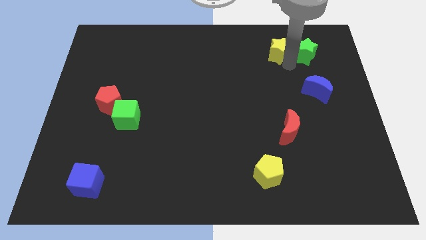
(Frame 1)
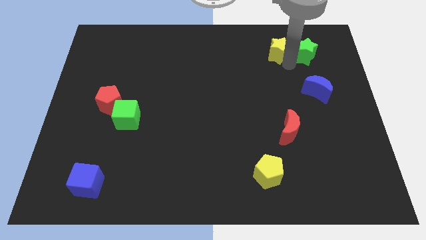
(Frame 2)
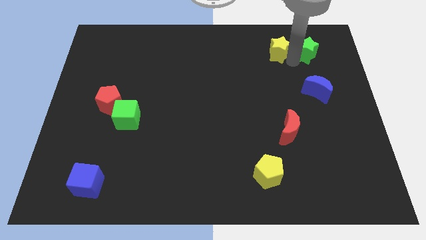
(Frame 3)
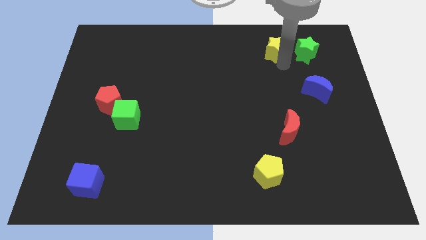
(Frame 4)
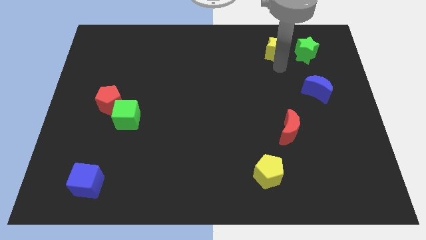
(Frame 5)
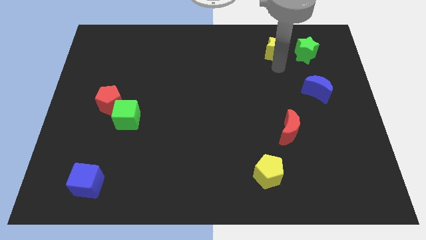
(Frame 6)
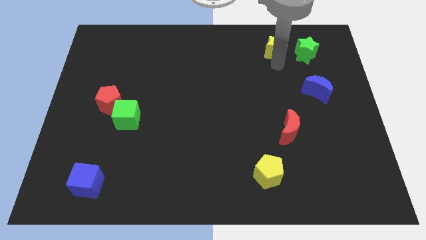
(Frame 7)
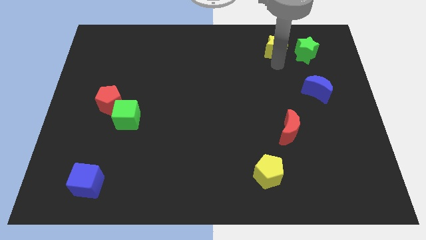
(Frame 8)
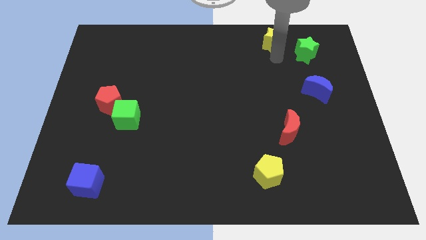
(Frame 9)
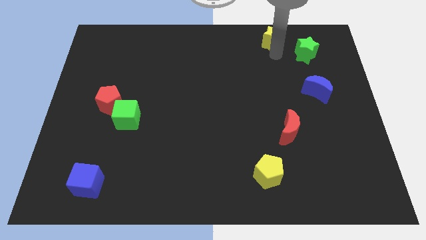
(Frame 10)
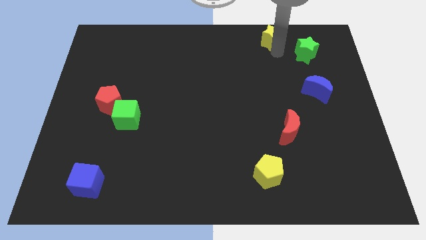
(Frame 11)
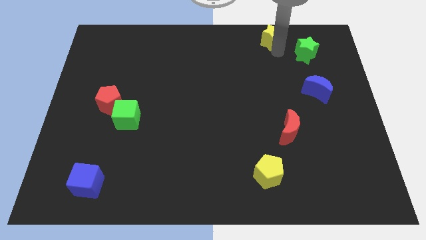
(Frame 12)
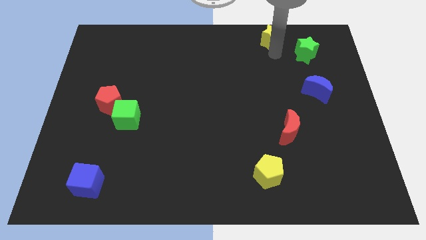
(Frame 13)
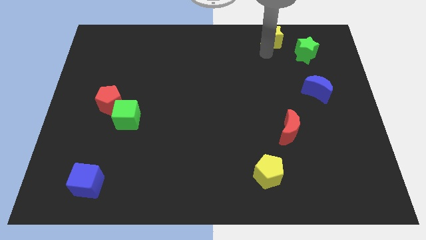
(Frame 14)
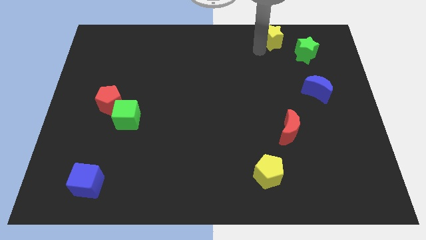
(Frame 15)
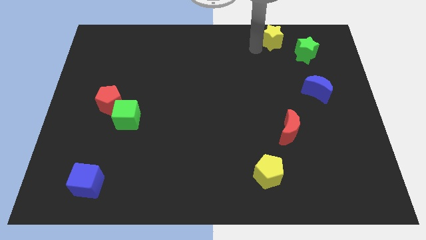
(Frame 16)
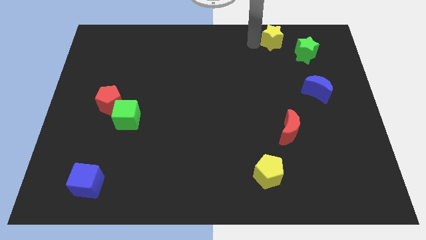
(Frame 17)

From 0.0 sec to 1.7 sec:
separate the yellow star and the green star

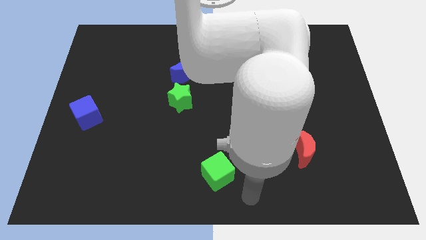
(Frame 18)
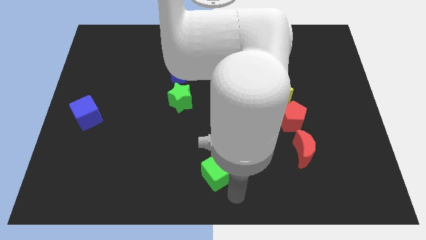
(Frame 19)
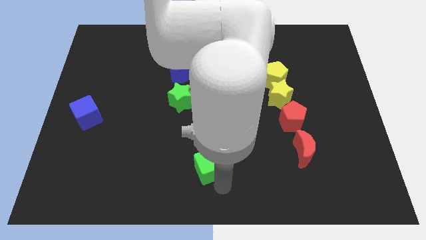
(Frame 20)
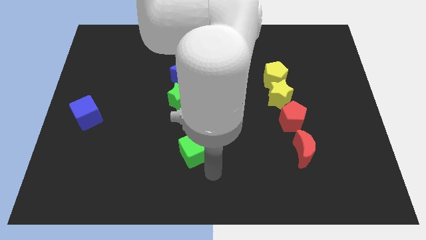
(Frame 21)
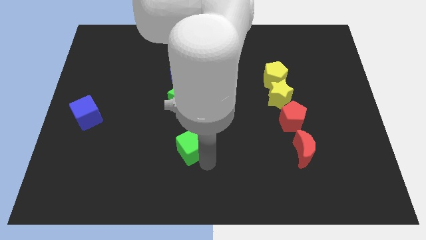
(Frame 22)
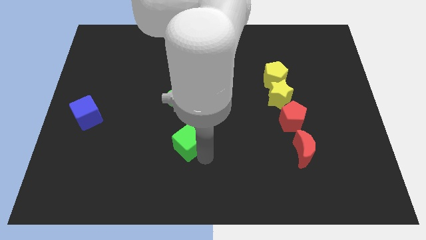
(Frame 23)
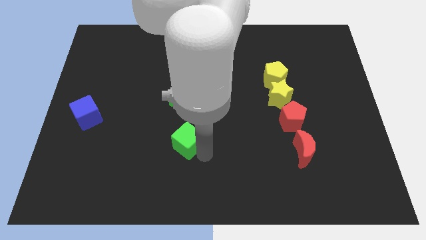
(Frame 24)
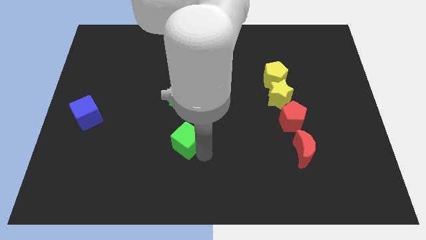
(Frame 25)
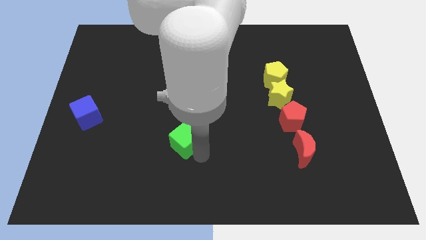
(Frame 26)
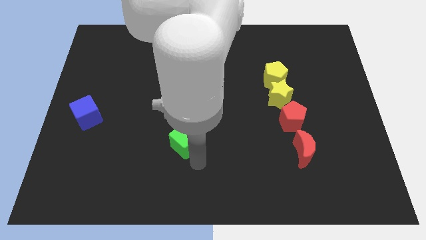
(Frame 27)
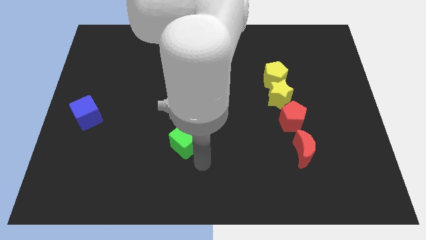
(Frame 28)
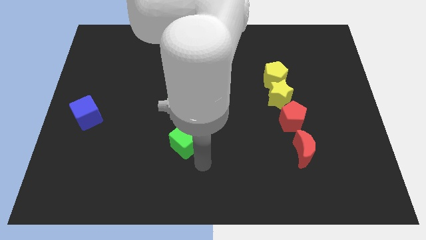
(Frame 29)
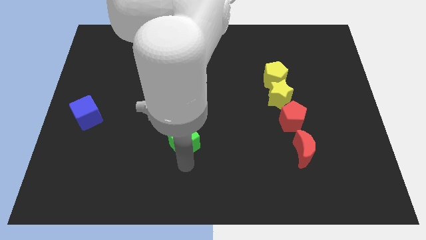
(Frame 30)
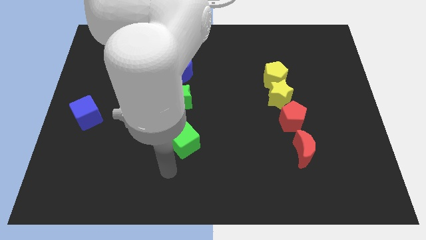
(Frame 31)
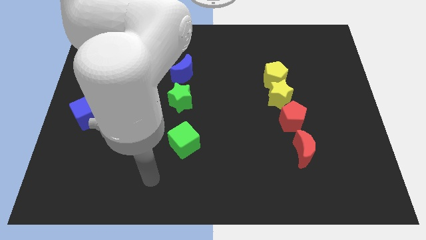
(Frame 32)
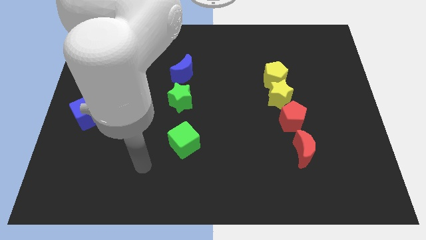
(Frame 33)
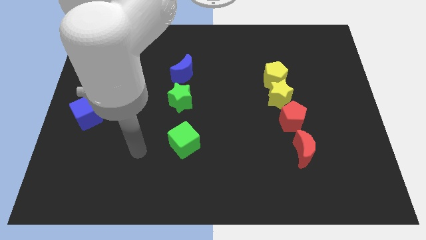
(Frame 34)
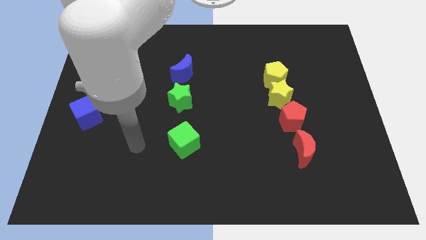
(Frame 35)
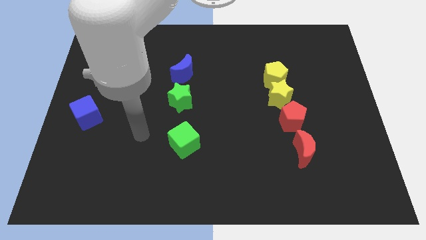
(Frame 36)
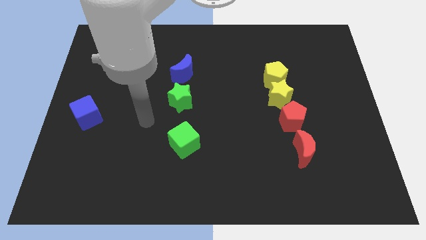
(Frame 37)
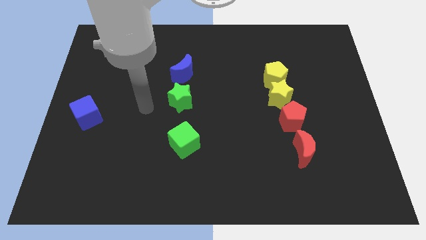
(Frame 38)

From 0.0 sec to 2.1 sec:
slide the green cube vertically below the green star

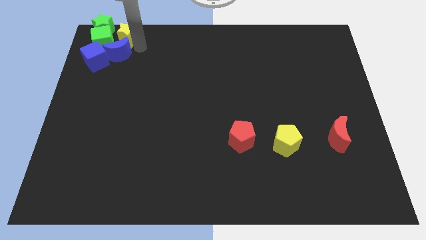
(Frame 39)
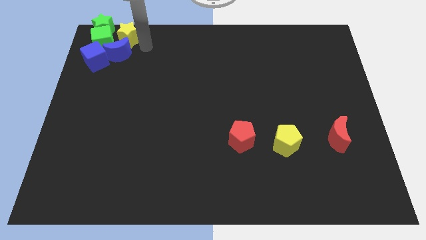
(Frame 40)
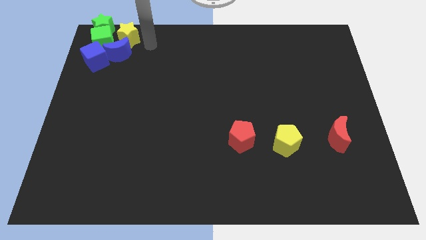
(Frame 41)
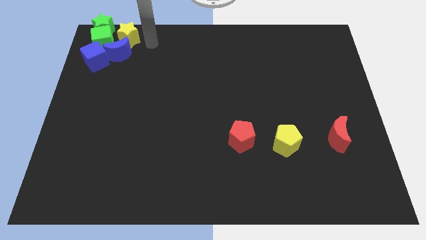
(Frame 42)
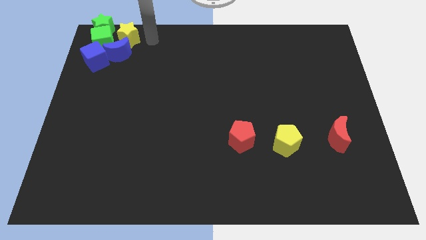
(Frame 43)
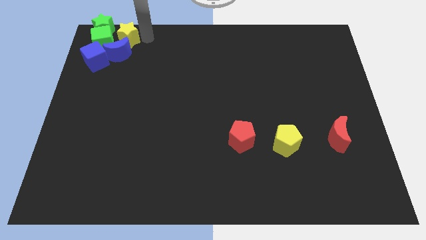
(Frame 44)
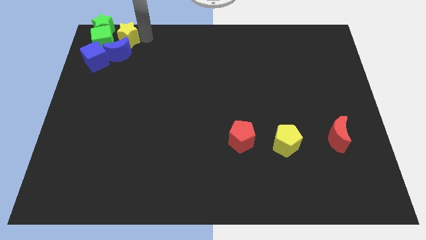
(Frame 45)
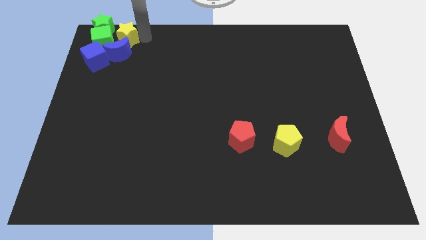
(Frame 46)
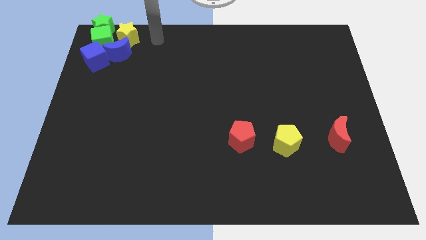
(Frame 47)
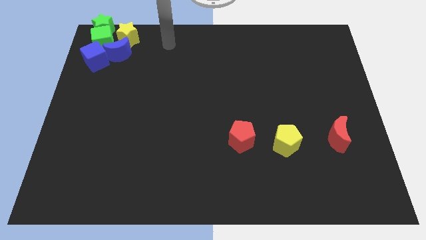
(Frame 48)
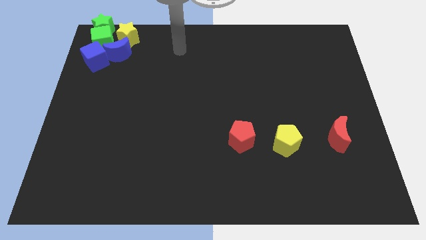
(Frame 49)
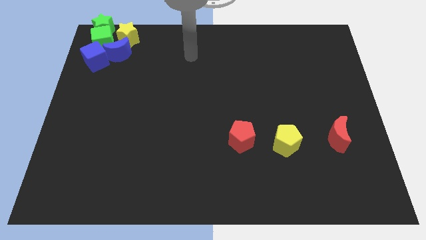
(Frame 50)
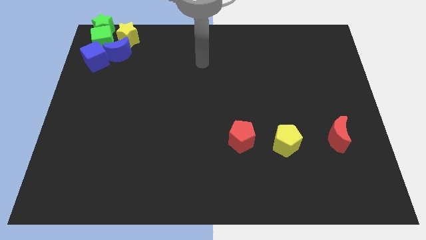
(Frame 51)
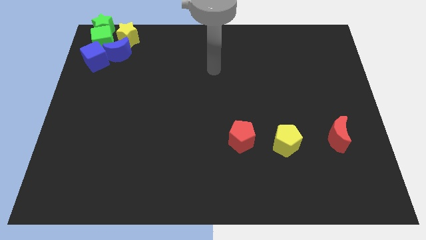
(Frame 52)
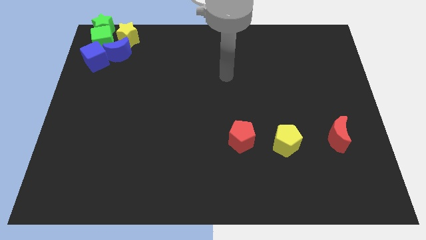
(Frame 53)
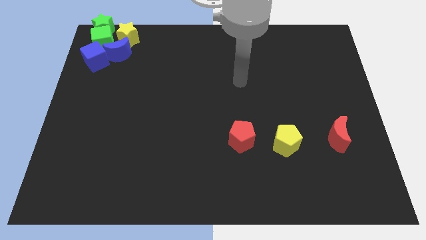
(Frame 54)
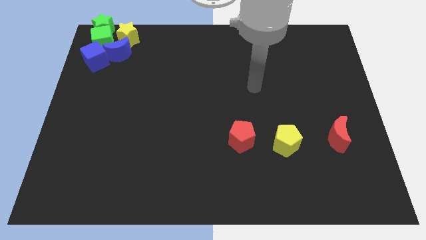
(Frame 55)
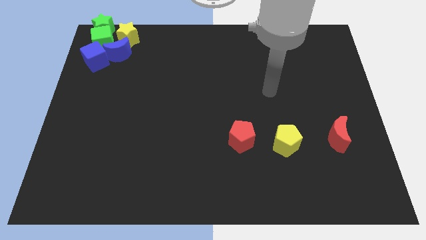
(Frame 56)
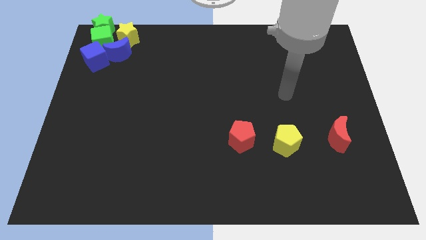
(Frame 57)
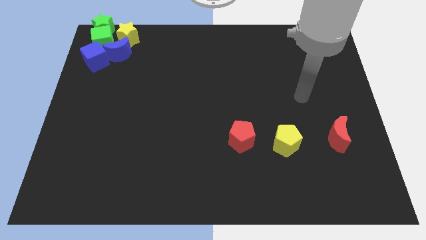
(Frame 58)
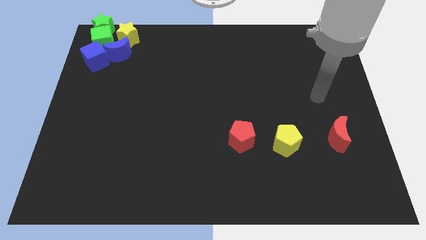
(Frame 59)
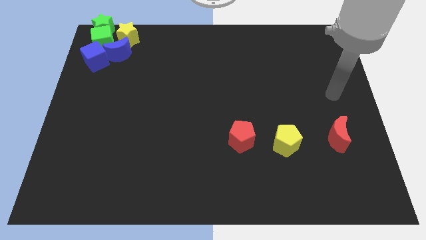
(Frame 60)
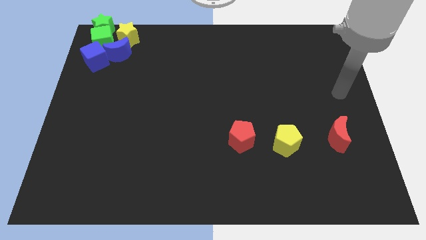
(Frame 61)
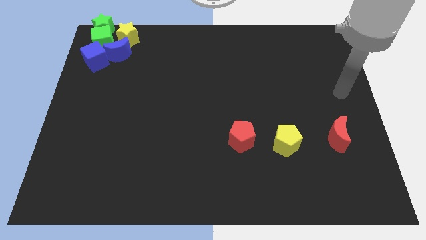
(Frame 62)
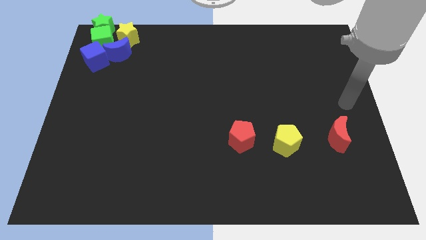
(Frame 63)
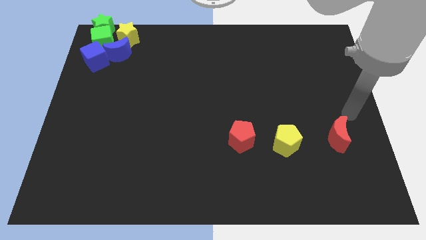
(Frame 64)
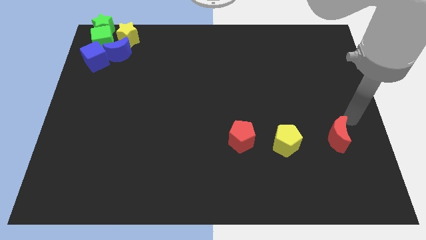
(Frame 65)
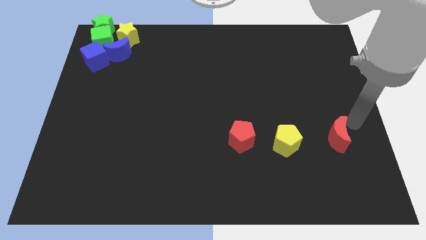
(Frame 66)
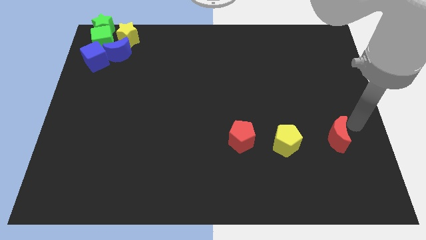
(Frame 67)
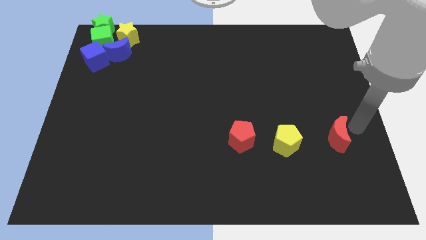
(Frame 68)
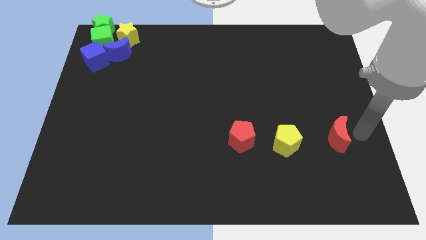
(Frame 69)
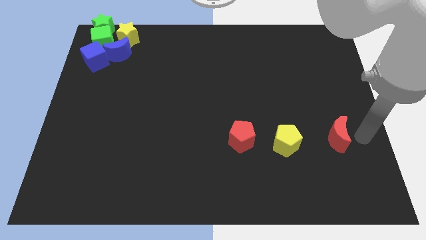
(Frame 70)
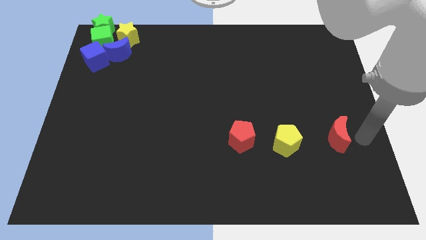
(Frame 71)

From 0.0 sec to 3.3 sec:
move away from the yellow star

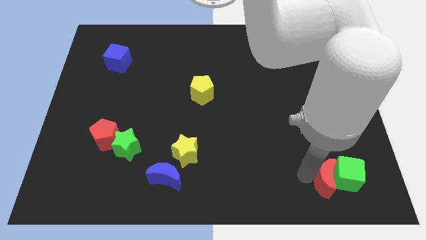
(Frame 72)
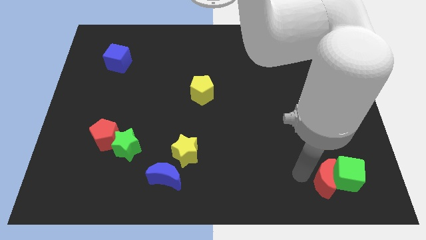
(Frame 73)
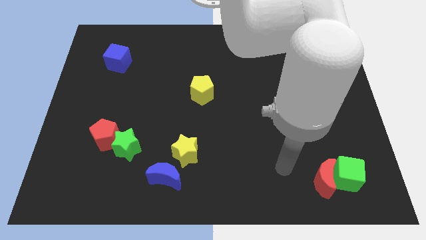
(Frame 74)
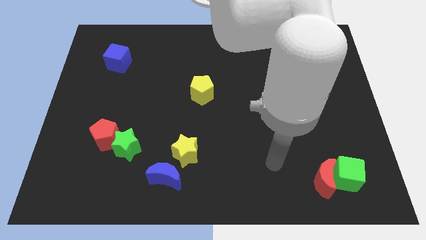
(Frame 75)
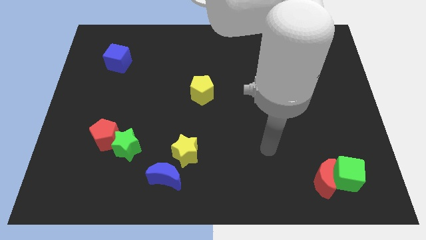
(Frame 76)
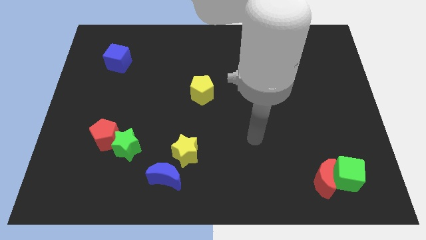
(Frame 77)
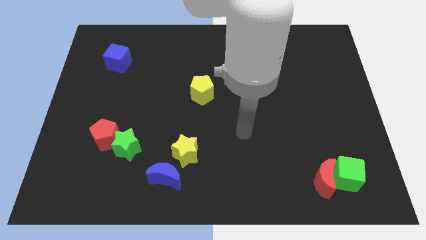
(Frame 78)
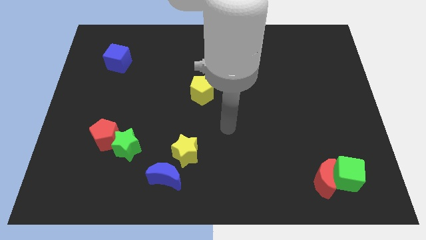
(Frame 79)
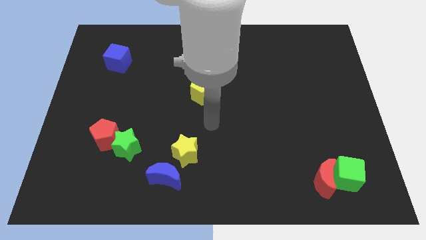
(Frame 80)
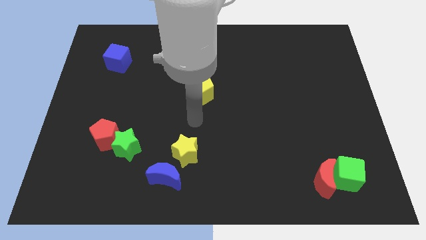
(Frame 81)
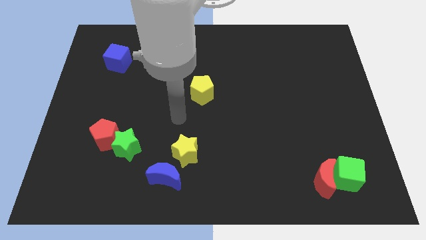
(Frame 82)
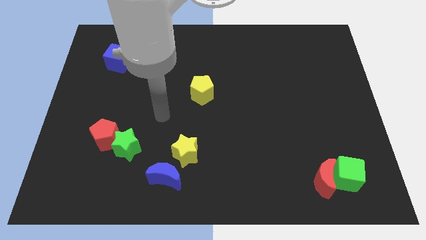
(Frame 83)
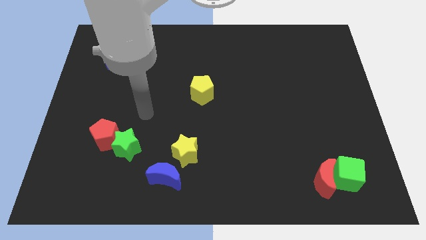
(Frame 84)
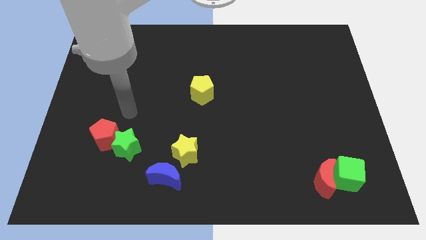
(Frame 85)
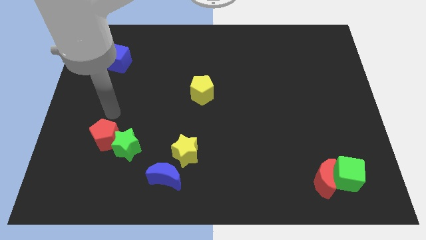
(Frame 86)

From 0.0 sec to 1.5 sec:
move your arm towards the red pentagon

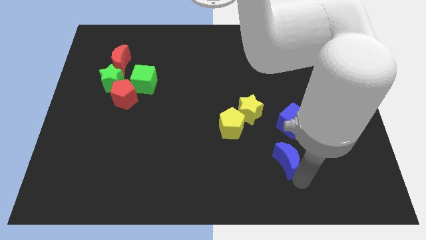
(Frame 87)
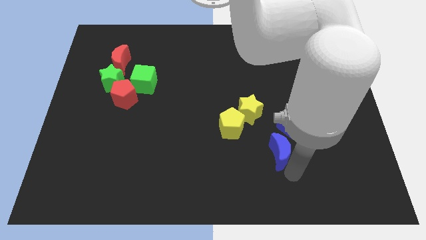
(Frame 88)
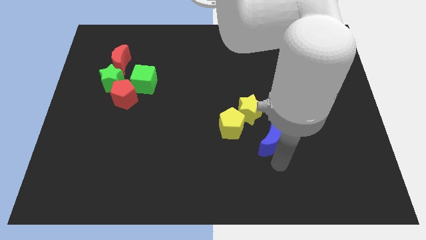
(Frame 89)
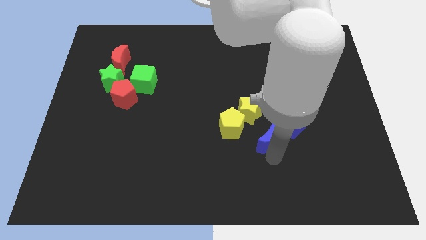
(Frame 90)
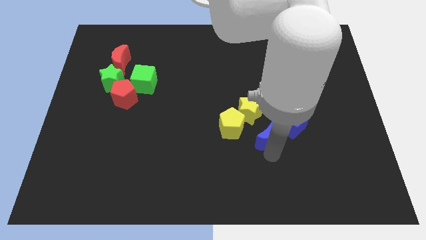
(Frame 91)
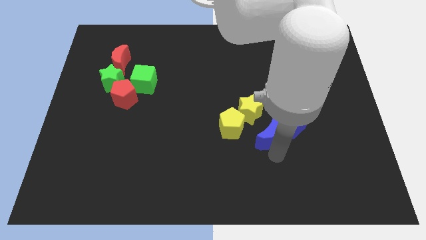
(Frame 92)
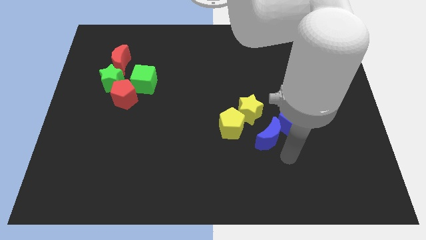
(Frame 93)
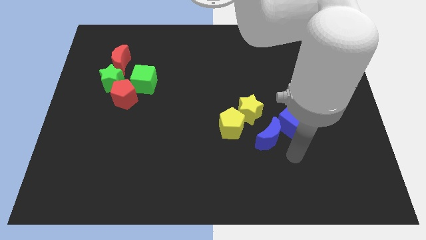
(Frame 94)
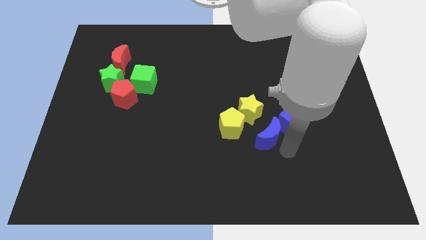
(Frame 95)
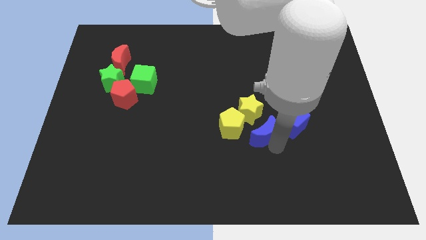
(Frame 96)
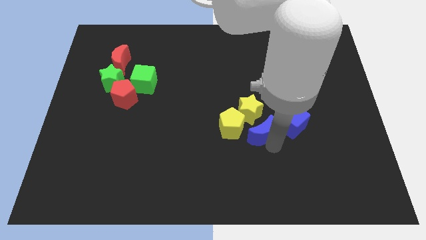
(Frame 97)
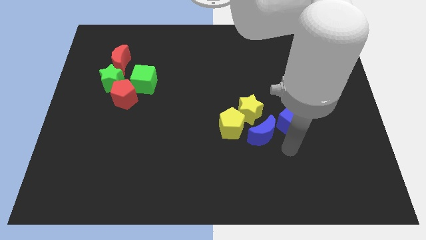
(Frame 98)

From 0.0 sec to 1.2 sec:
move the blue crescent to the bottom of the yellow star on the board
